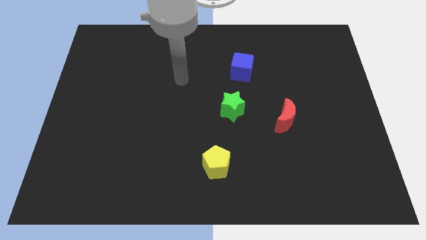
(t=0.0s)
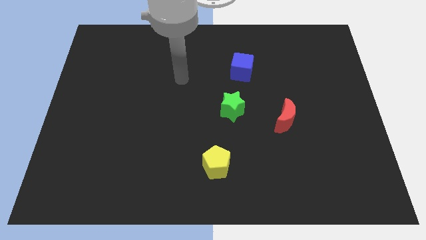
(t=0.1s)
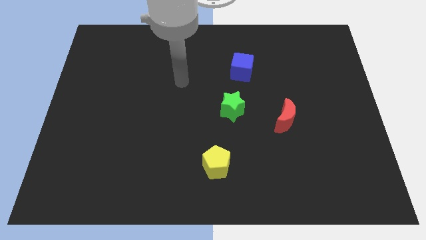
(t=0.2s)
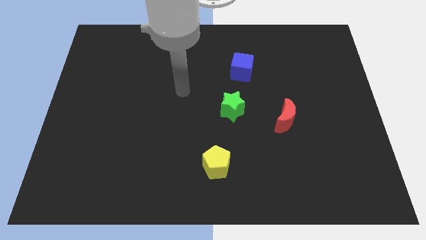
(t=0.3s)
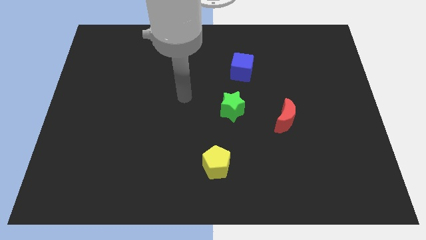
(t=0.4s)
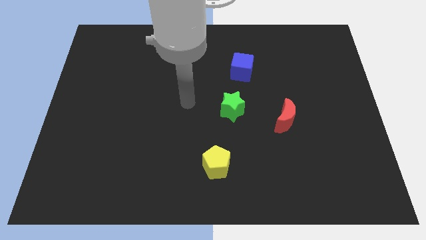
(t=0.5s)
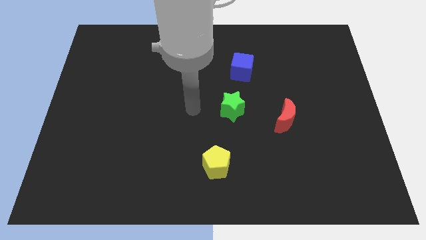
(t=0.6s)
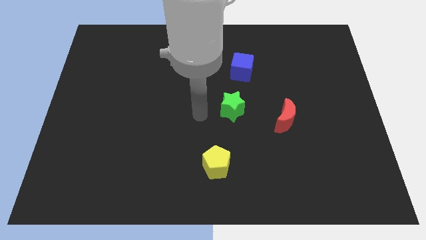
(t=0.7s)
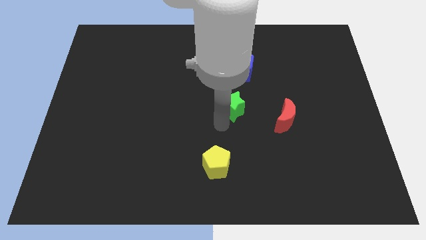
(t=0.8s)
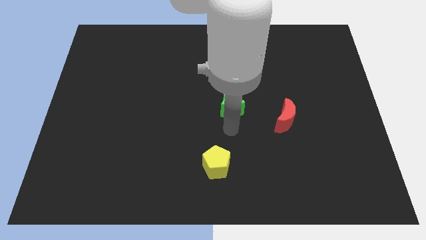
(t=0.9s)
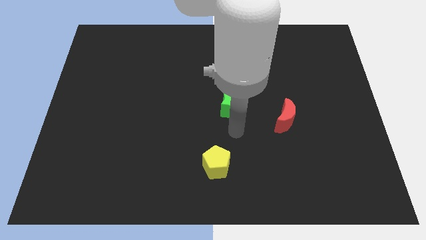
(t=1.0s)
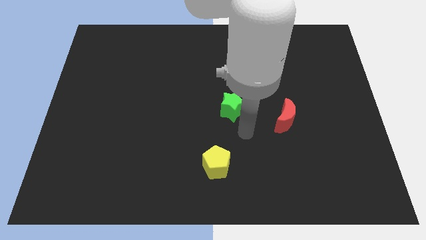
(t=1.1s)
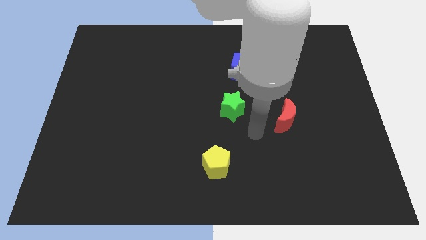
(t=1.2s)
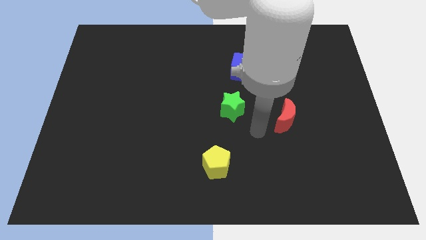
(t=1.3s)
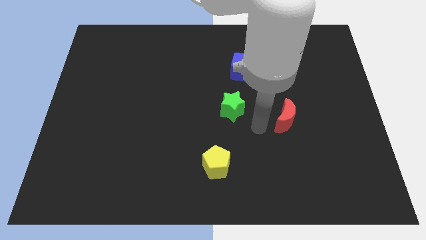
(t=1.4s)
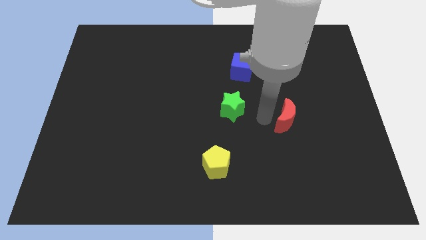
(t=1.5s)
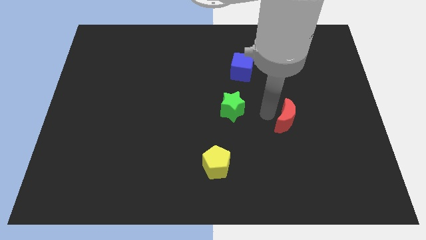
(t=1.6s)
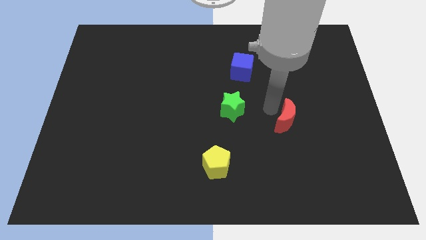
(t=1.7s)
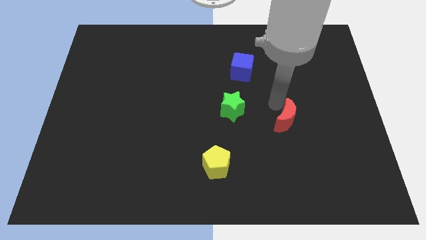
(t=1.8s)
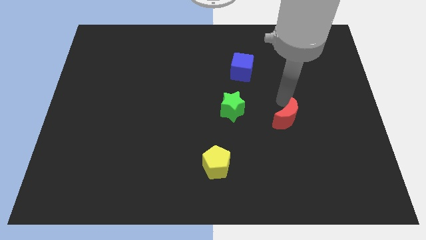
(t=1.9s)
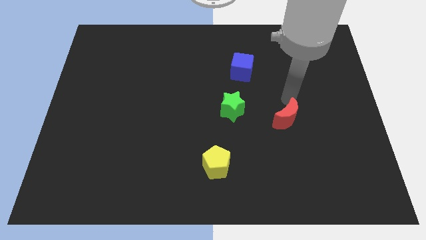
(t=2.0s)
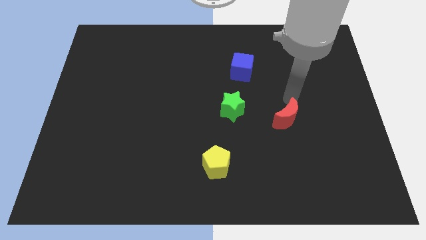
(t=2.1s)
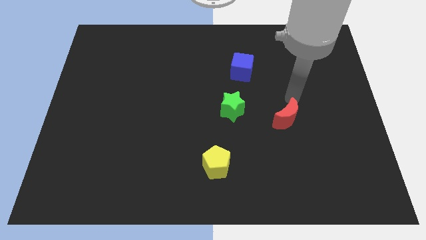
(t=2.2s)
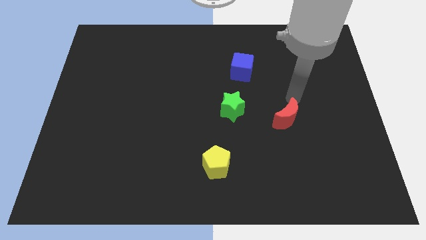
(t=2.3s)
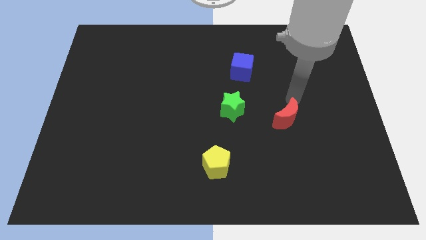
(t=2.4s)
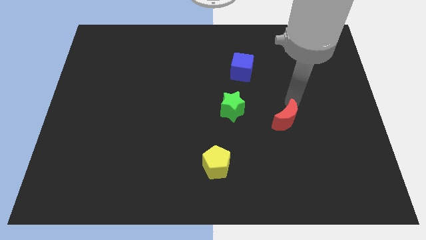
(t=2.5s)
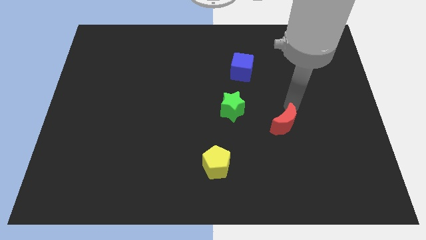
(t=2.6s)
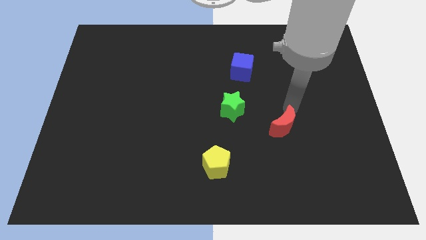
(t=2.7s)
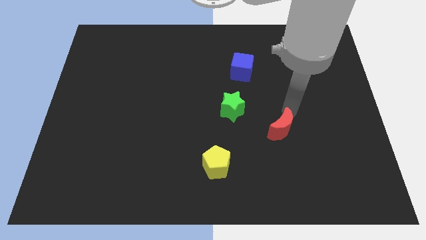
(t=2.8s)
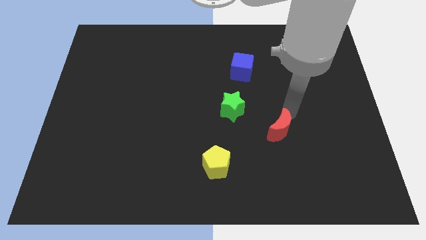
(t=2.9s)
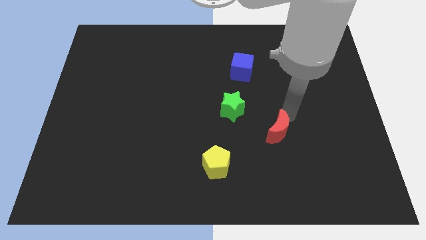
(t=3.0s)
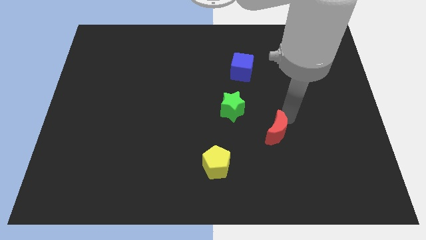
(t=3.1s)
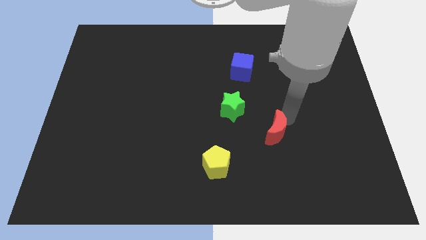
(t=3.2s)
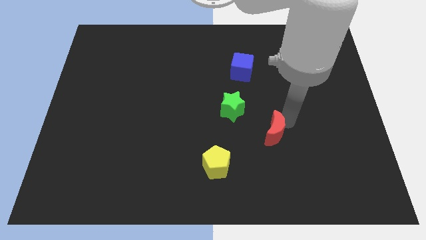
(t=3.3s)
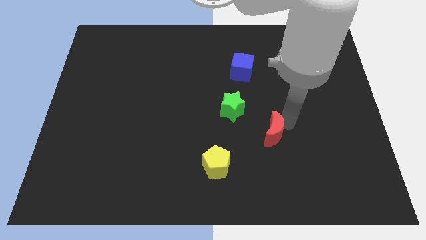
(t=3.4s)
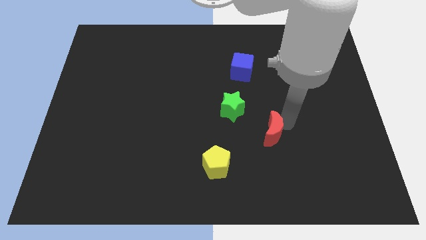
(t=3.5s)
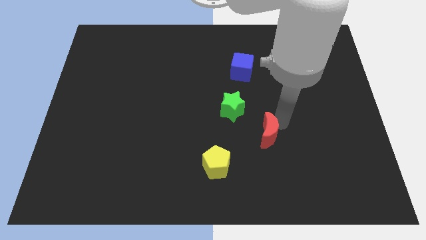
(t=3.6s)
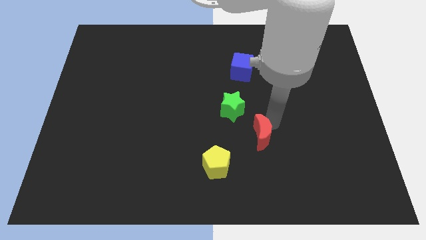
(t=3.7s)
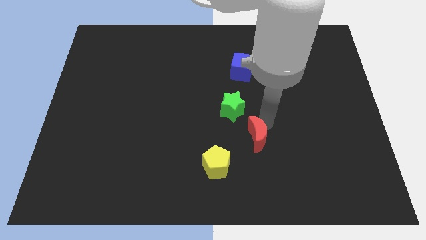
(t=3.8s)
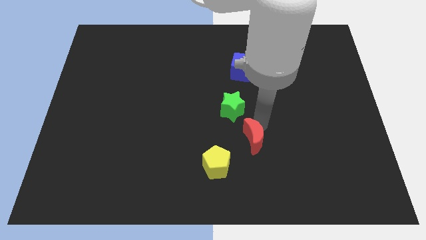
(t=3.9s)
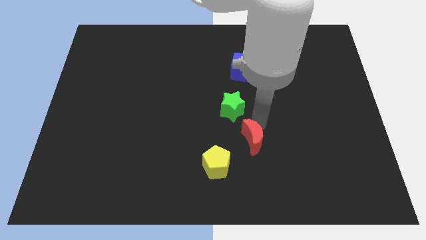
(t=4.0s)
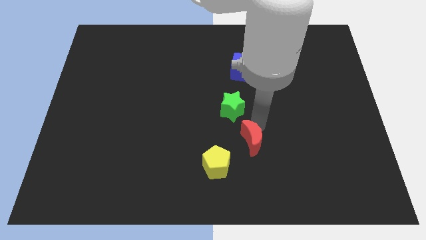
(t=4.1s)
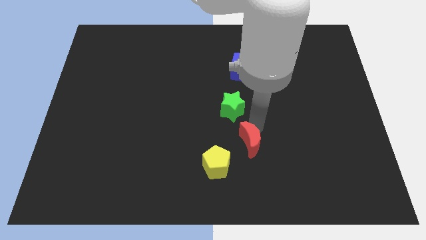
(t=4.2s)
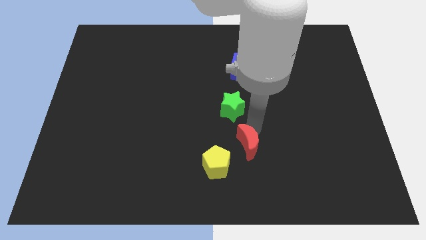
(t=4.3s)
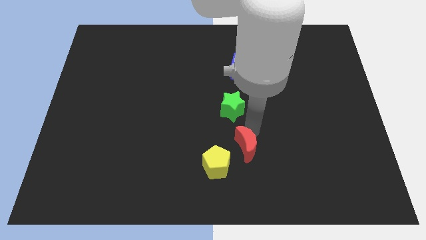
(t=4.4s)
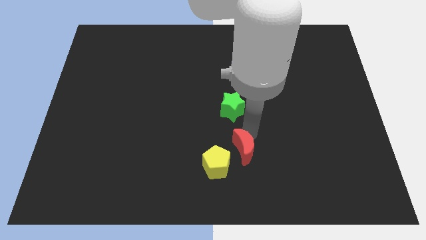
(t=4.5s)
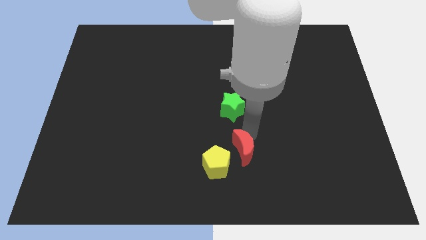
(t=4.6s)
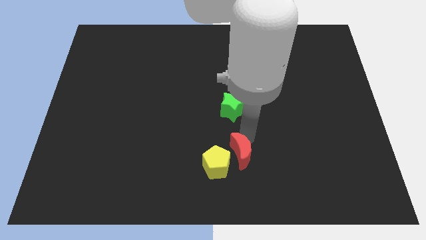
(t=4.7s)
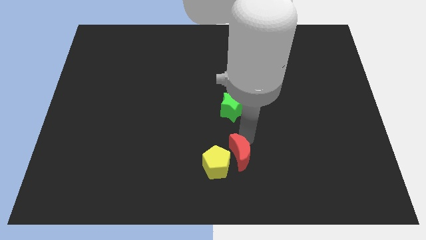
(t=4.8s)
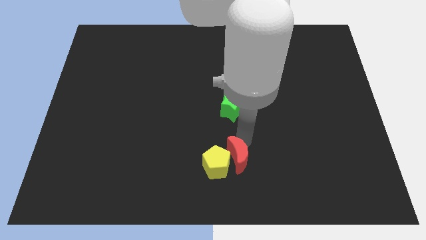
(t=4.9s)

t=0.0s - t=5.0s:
slide the red block next to the yellow block

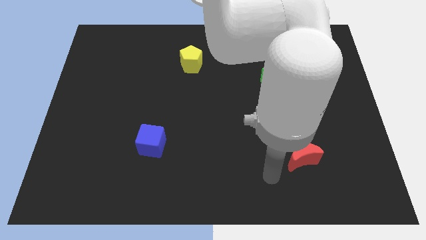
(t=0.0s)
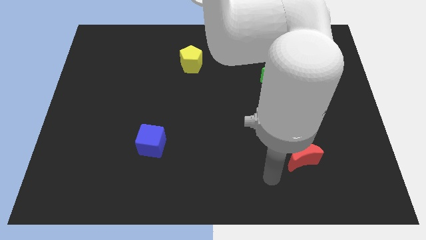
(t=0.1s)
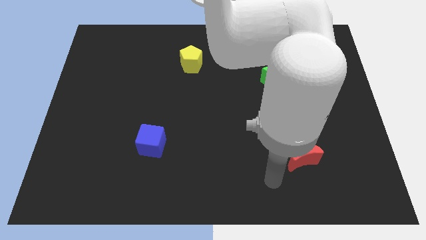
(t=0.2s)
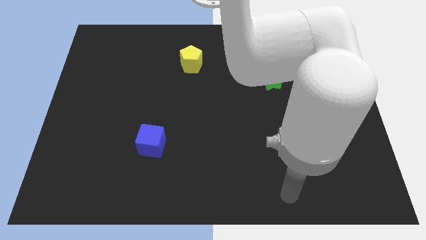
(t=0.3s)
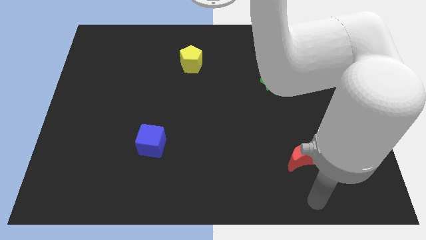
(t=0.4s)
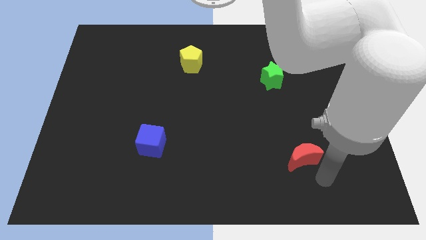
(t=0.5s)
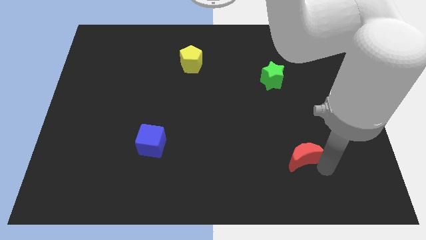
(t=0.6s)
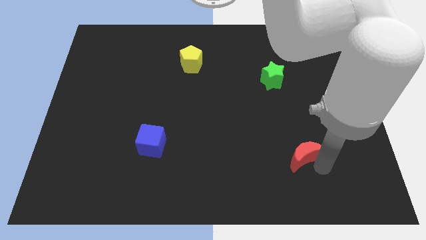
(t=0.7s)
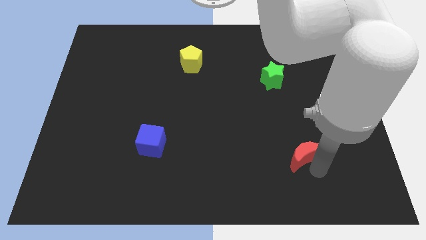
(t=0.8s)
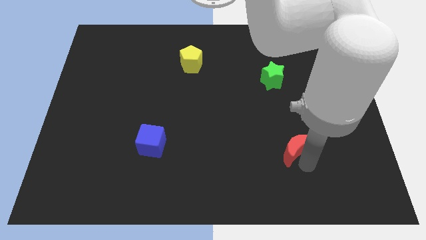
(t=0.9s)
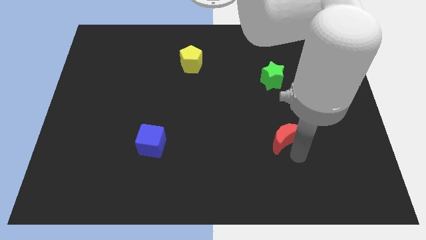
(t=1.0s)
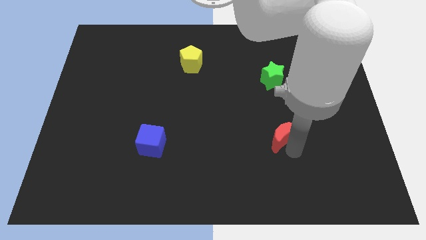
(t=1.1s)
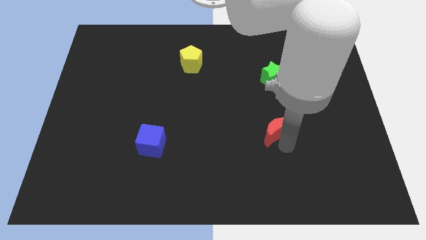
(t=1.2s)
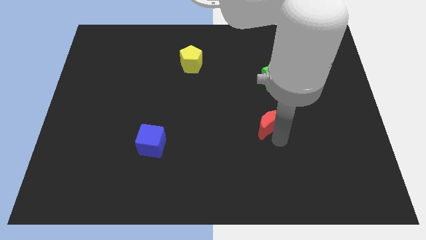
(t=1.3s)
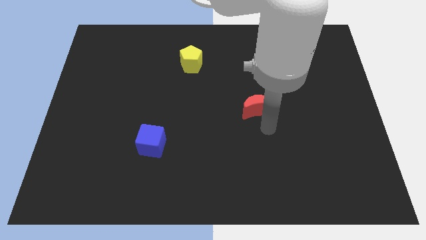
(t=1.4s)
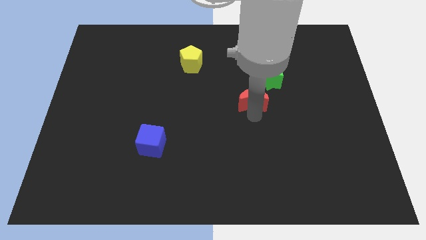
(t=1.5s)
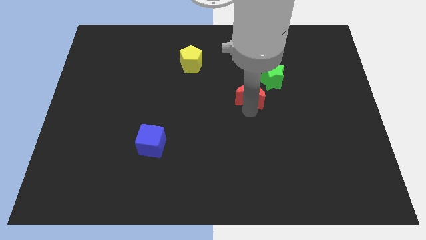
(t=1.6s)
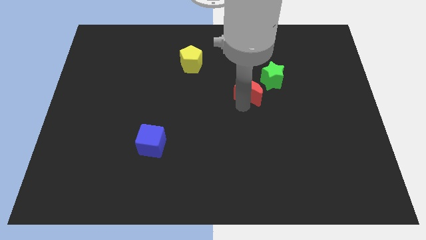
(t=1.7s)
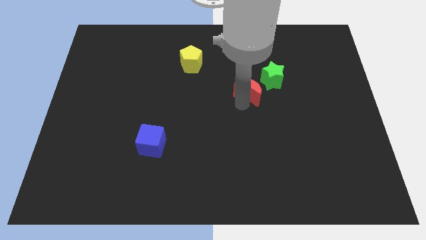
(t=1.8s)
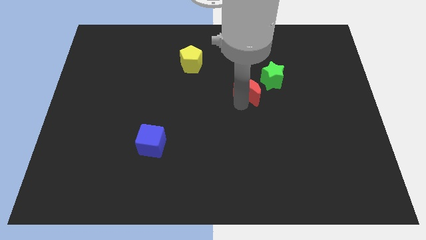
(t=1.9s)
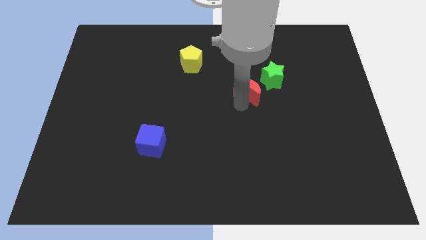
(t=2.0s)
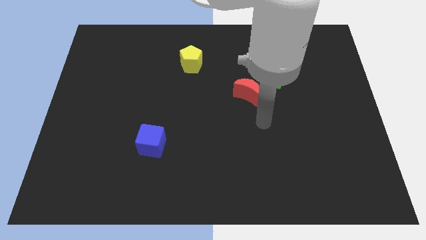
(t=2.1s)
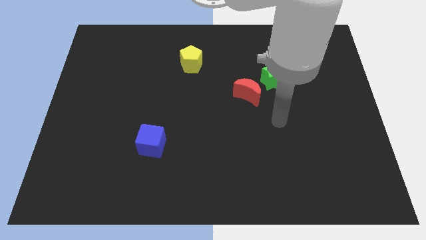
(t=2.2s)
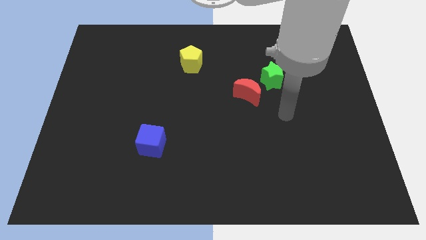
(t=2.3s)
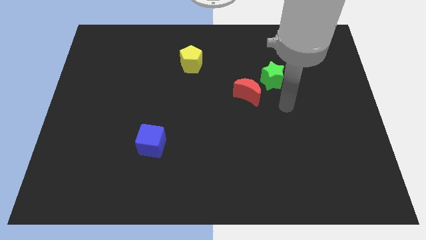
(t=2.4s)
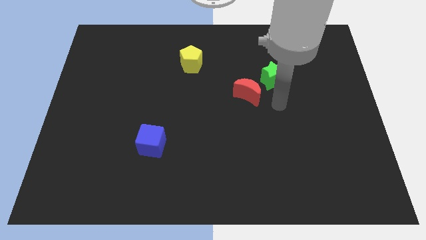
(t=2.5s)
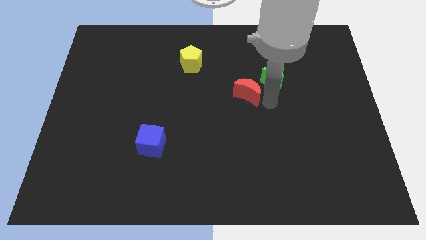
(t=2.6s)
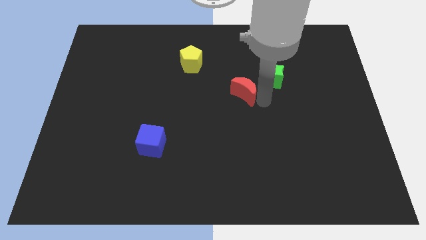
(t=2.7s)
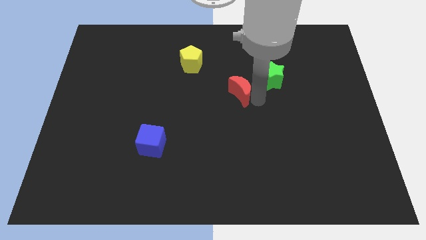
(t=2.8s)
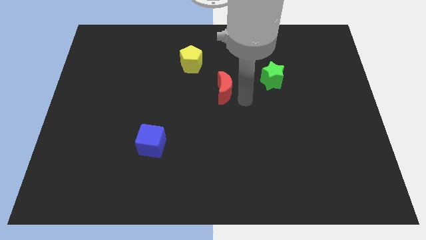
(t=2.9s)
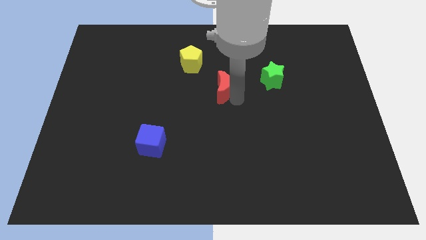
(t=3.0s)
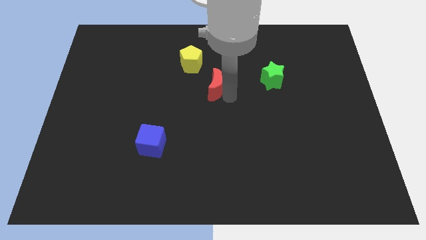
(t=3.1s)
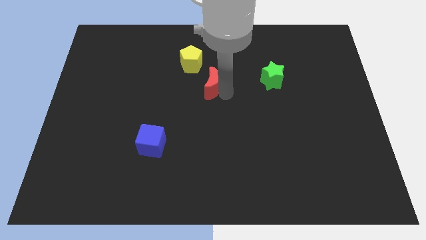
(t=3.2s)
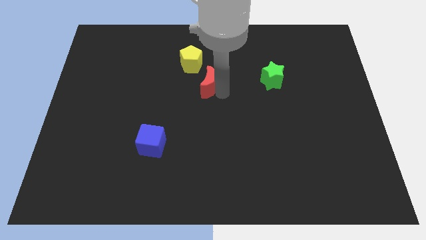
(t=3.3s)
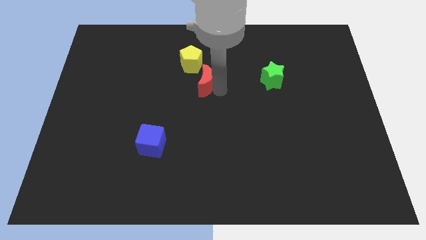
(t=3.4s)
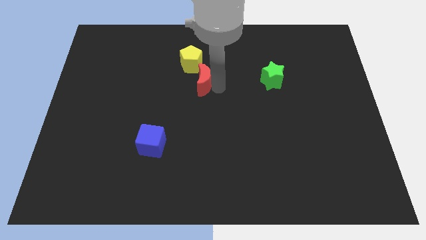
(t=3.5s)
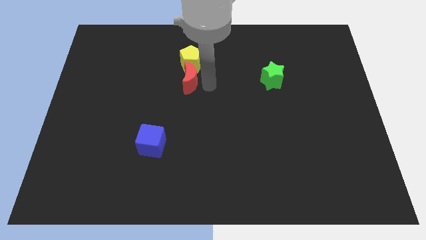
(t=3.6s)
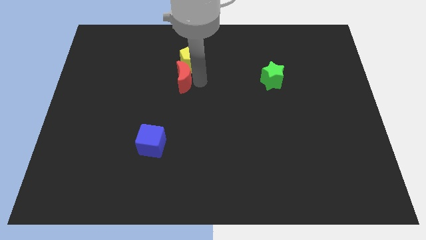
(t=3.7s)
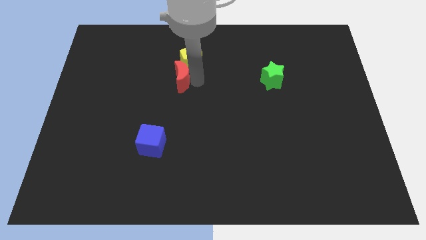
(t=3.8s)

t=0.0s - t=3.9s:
slide the red moon towards the pentagon
